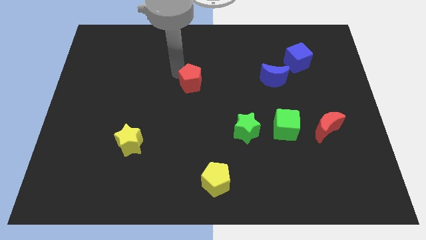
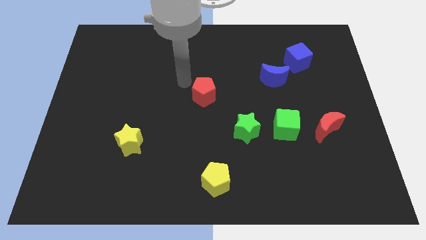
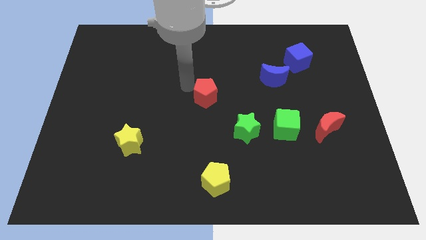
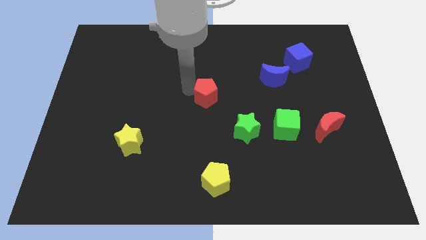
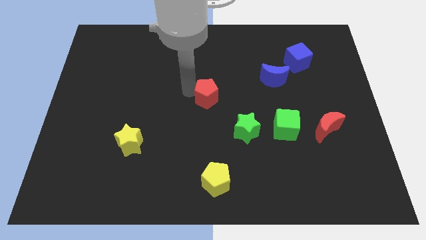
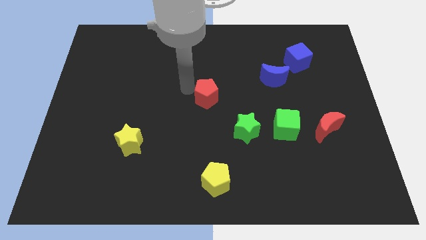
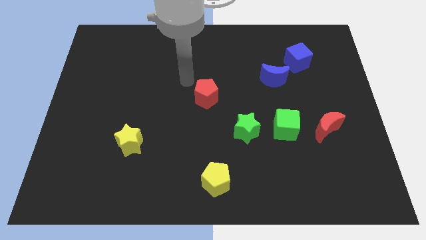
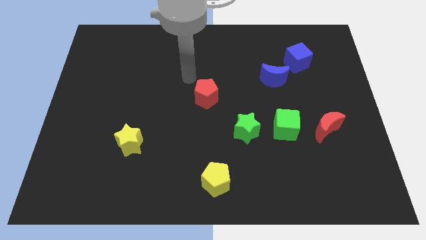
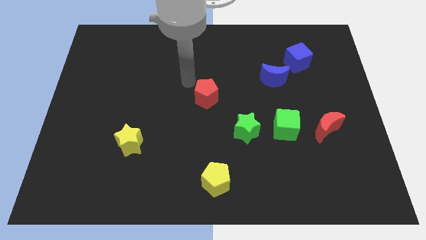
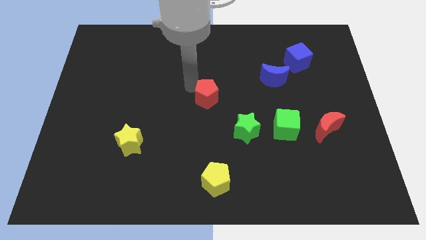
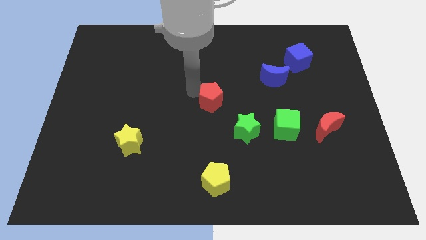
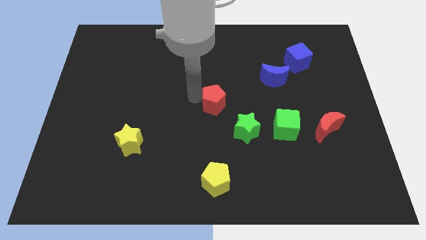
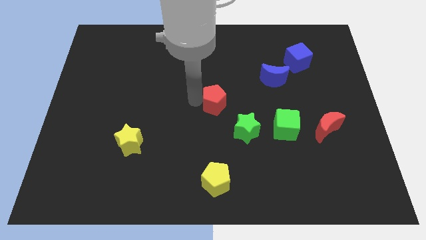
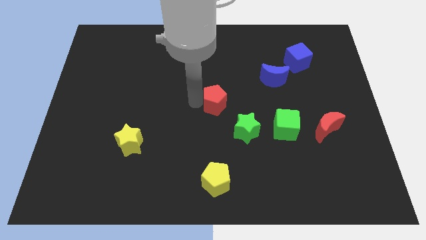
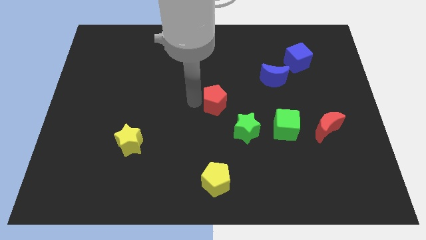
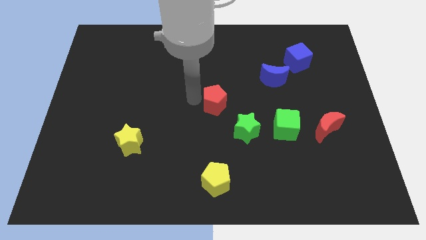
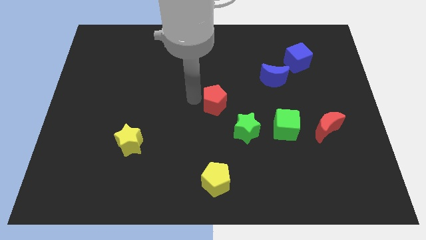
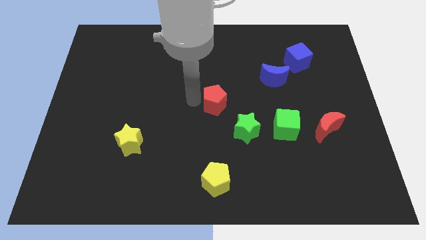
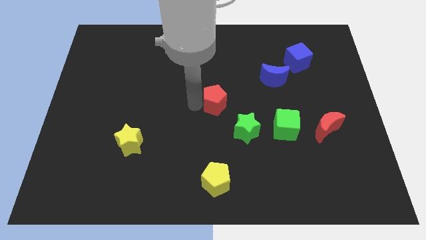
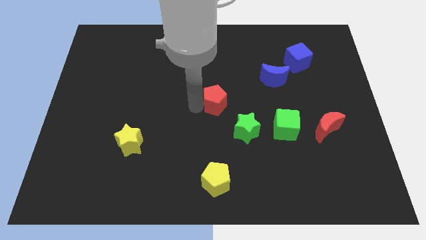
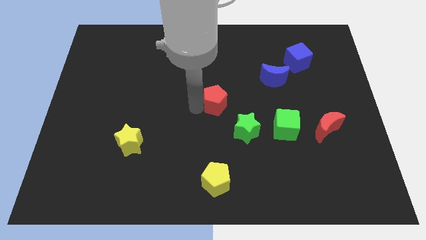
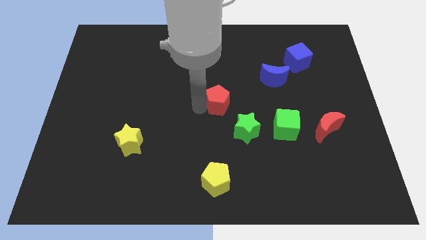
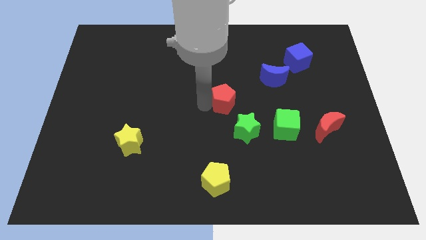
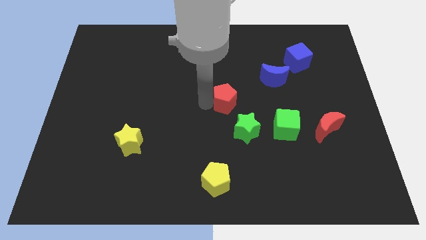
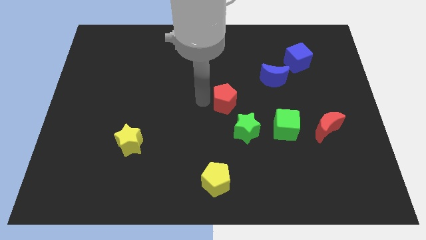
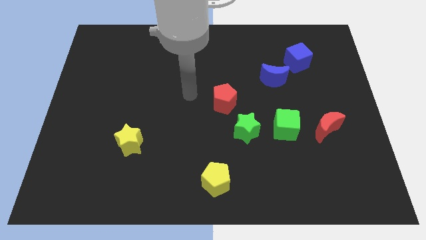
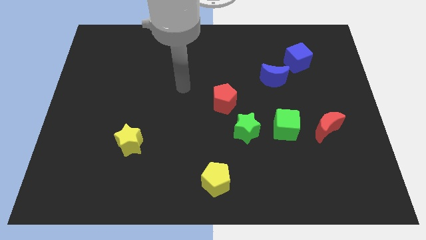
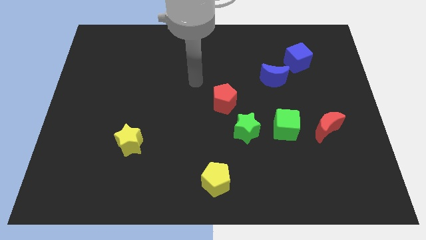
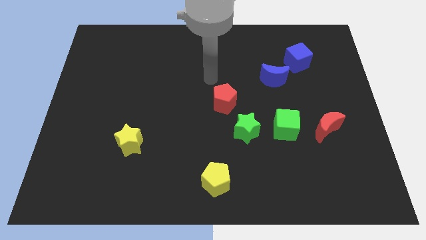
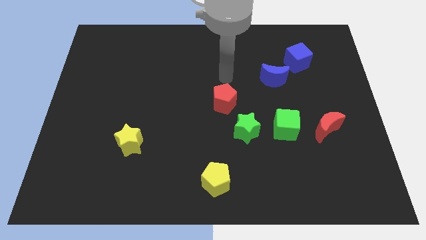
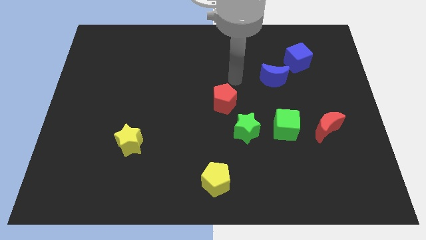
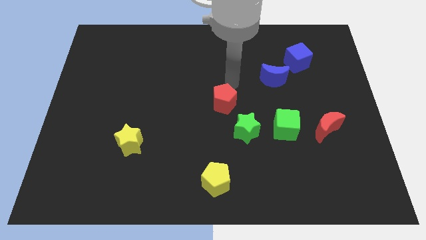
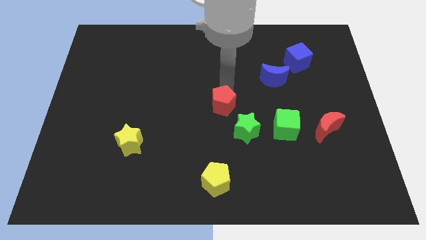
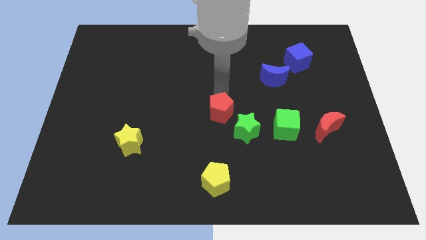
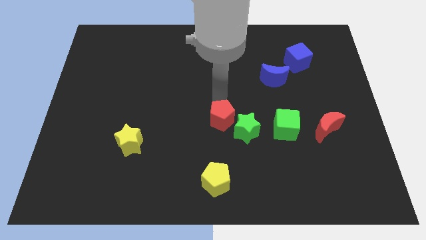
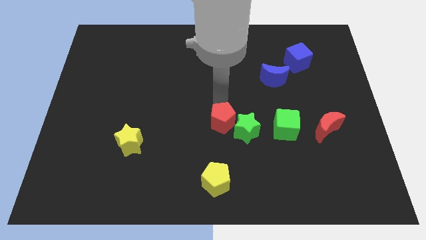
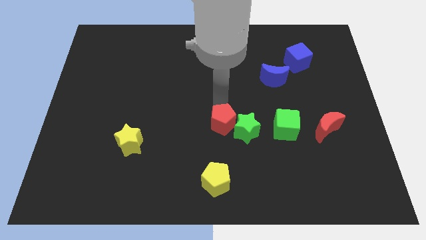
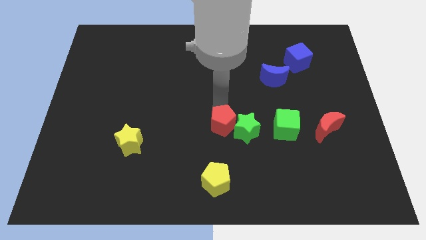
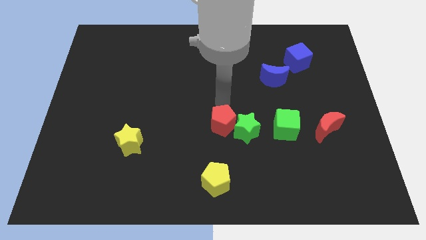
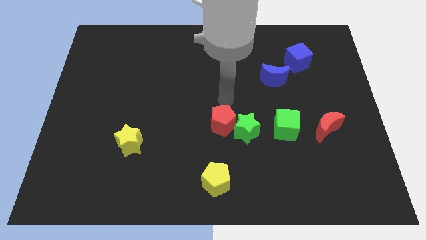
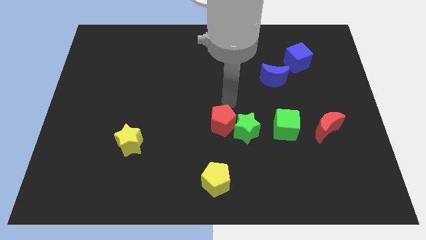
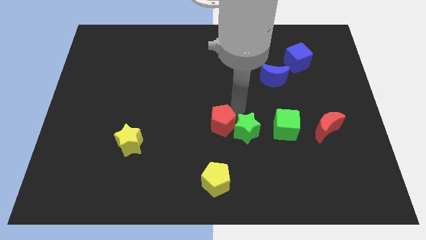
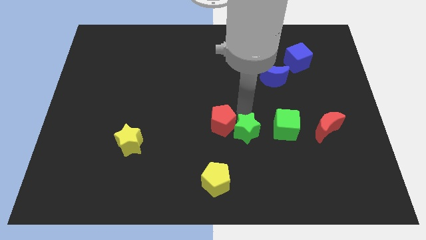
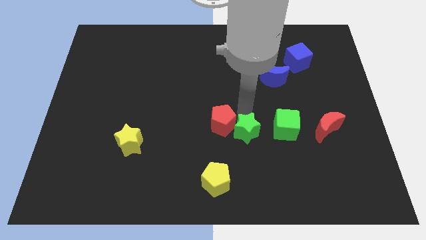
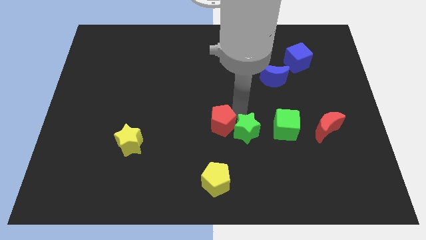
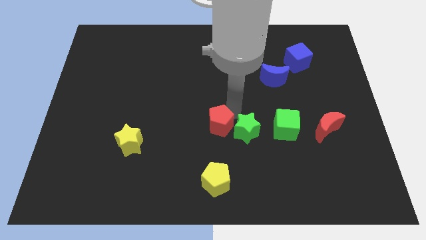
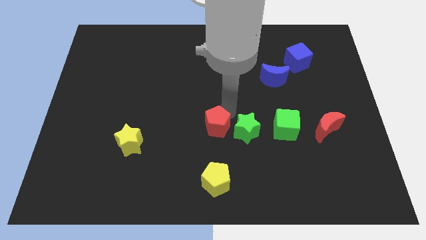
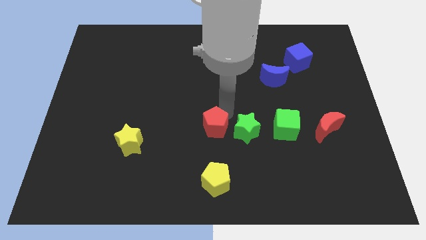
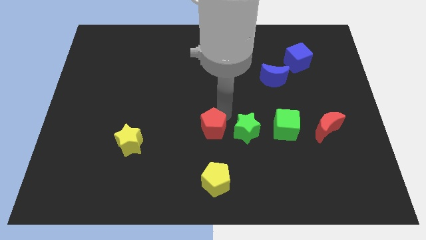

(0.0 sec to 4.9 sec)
move the red pentagon to the left of green star

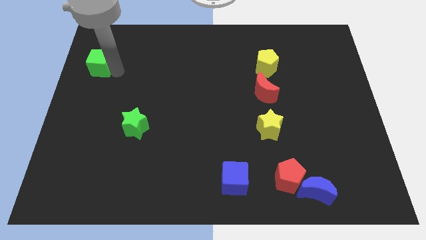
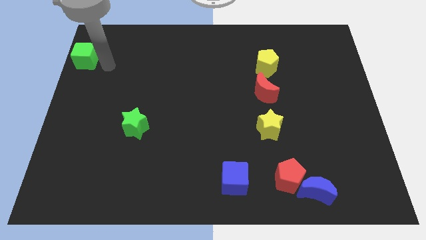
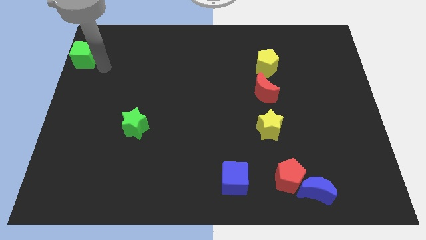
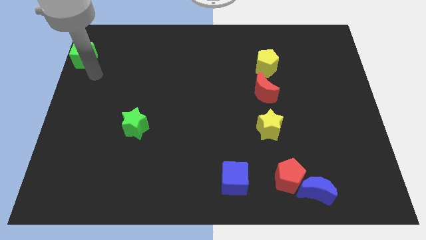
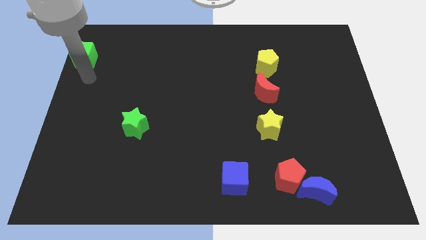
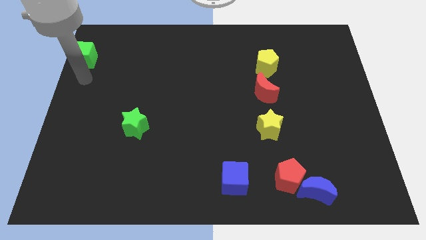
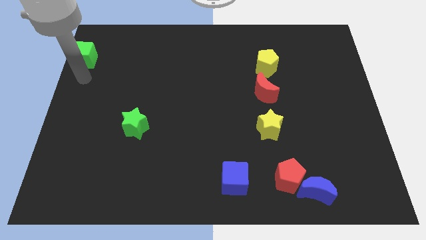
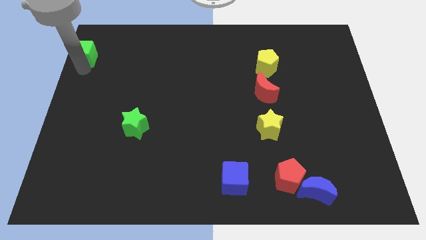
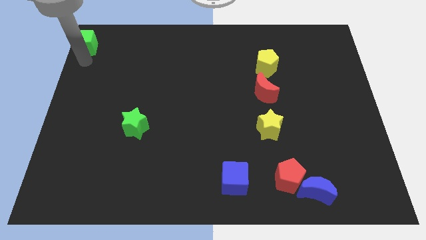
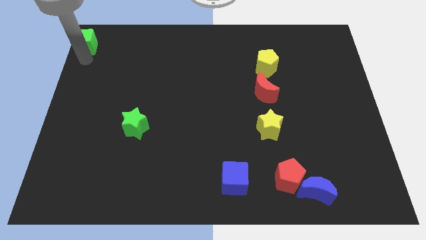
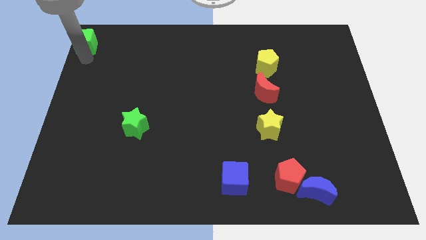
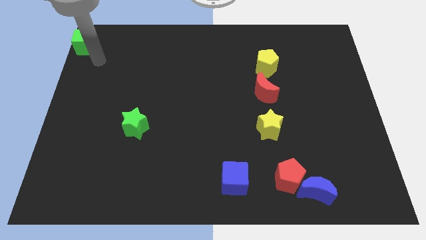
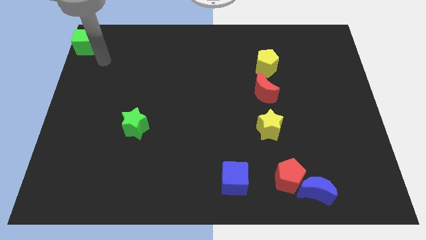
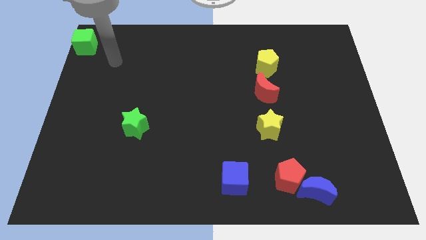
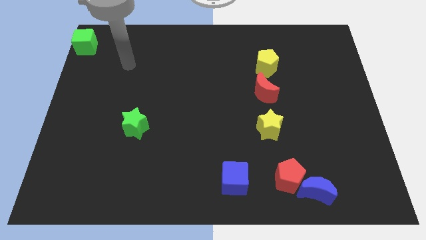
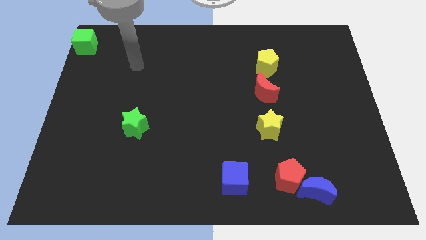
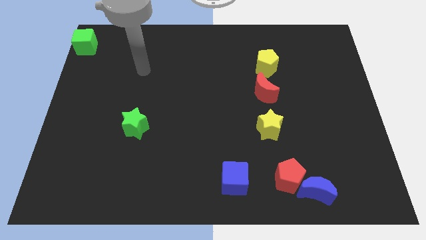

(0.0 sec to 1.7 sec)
place green block on top left of the board

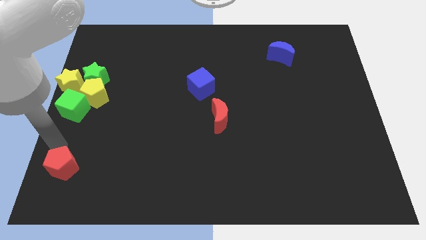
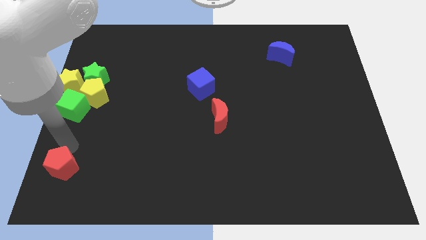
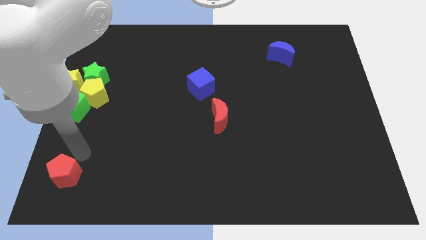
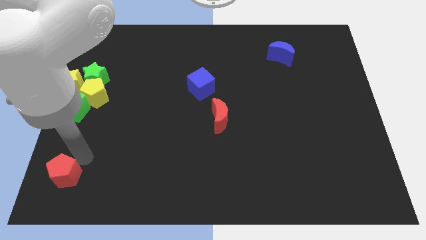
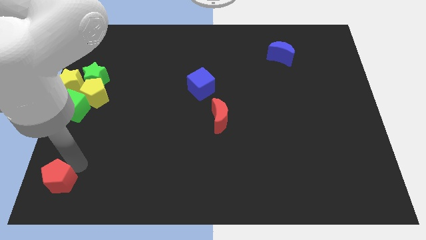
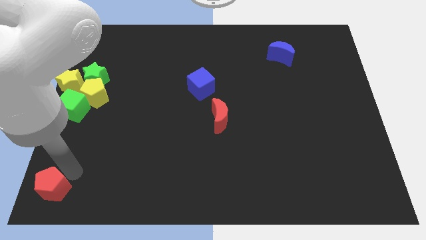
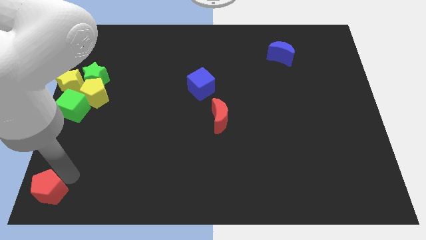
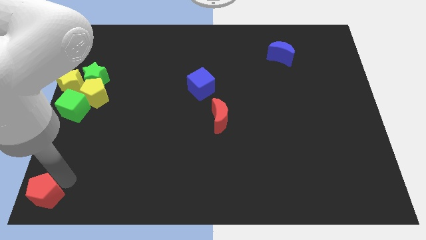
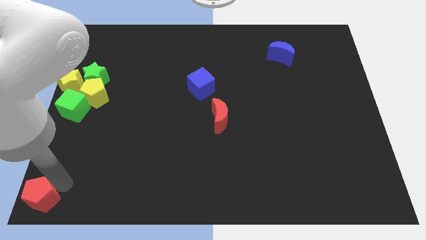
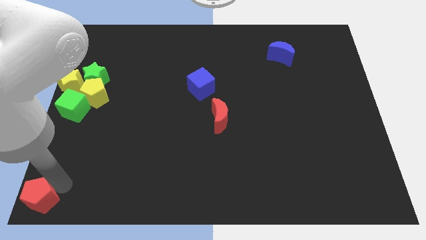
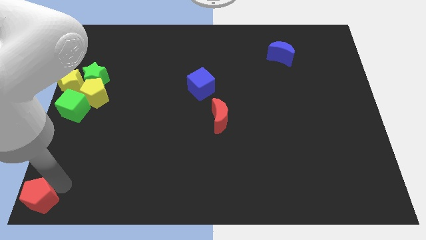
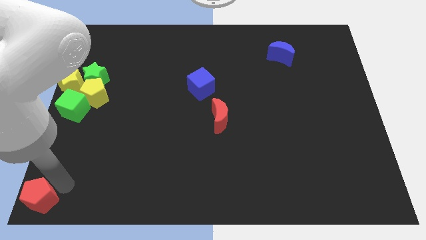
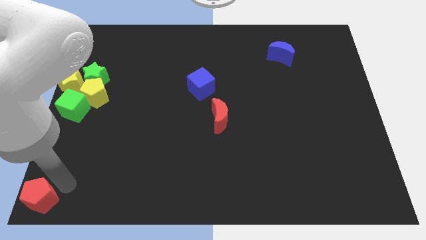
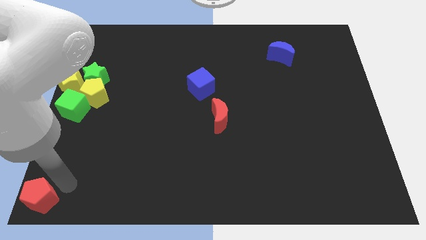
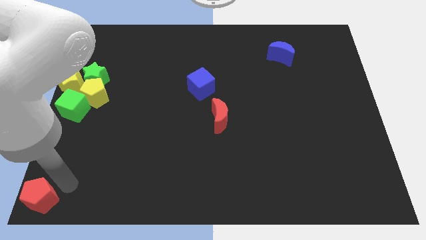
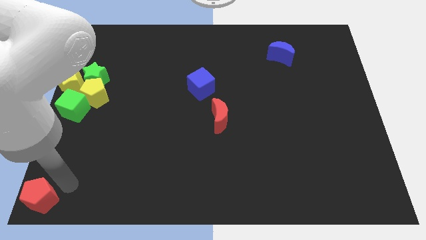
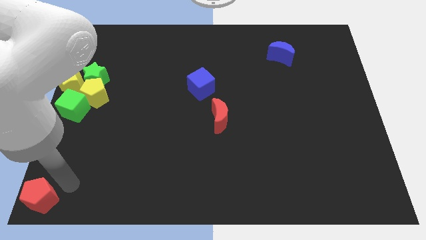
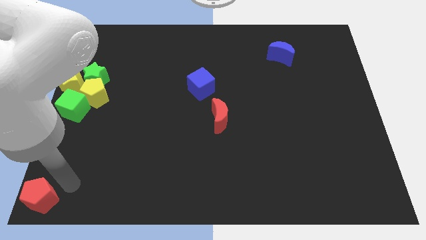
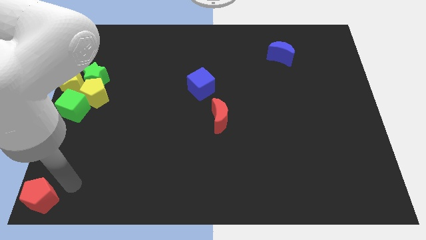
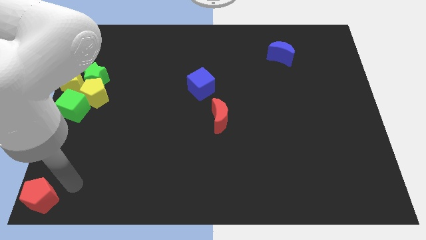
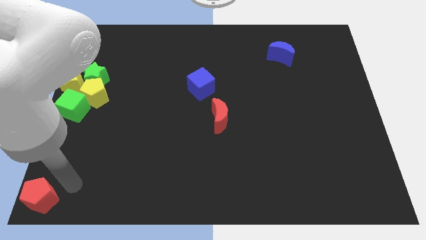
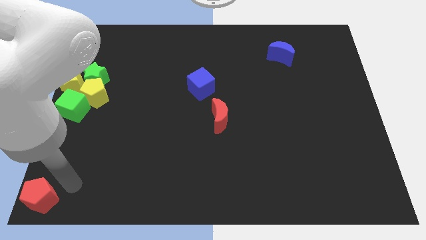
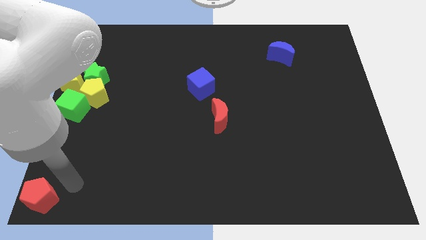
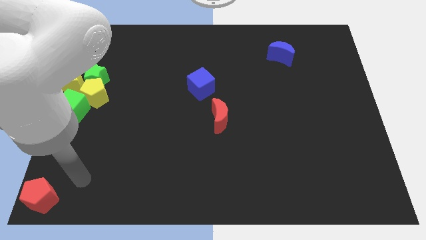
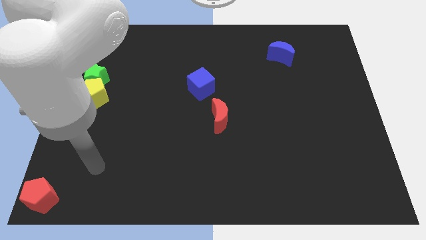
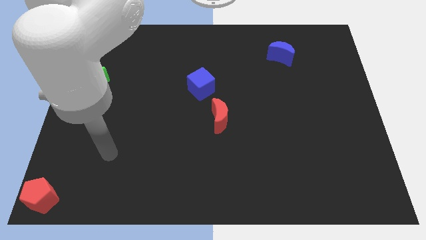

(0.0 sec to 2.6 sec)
move red pentagon towards bottom left
